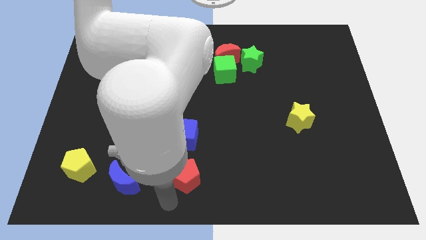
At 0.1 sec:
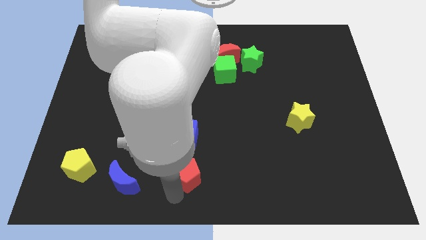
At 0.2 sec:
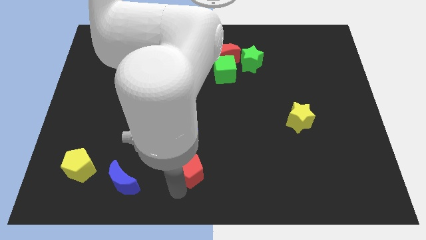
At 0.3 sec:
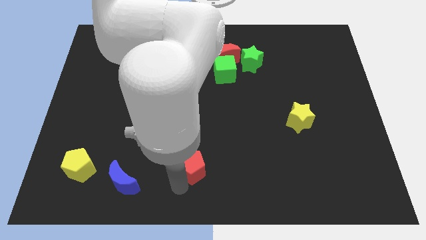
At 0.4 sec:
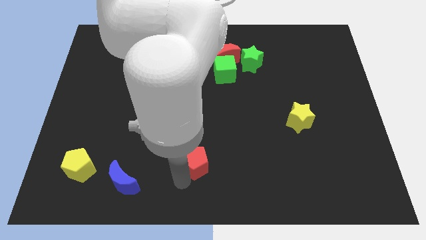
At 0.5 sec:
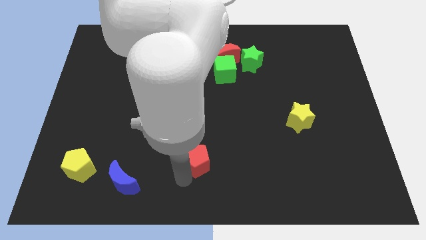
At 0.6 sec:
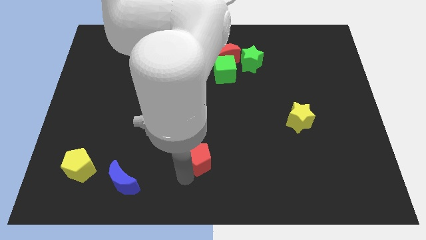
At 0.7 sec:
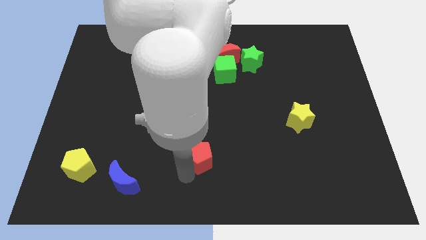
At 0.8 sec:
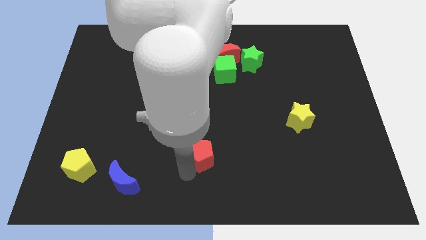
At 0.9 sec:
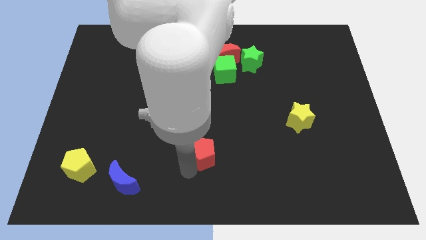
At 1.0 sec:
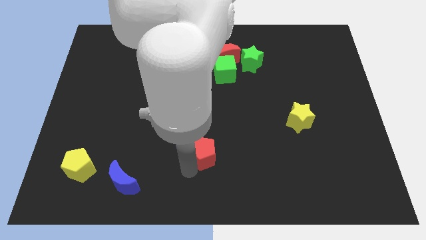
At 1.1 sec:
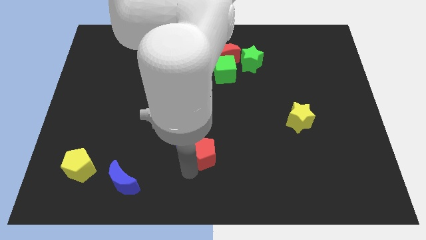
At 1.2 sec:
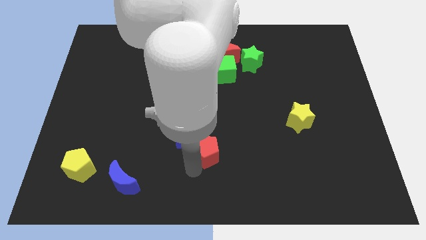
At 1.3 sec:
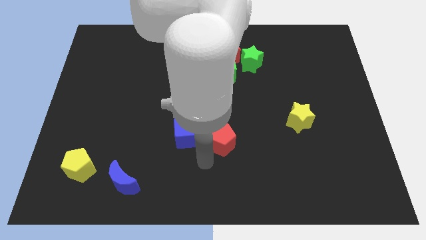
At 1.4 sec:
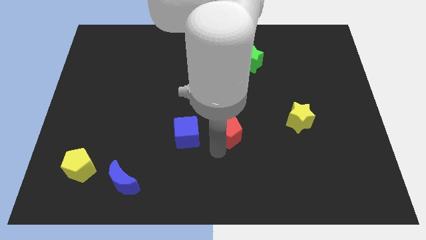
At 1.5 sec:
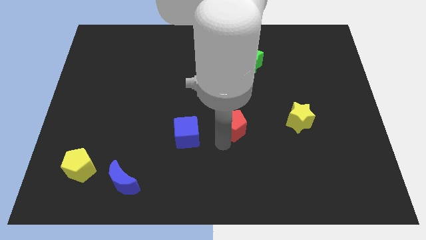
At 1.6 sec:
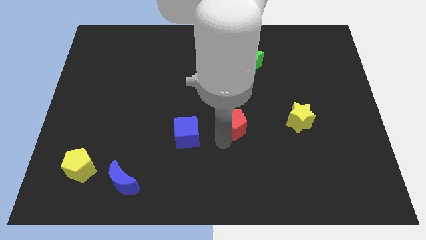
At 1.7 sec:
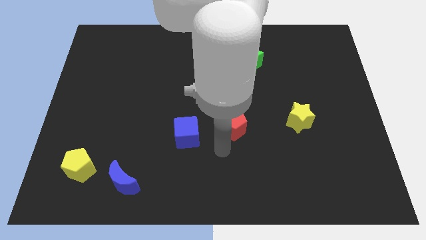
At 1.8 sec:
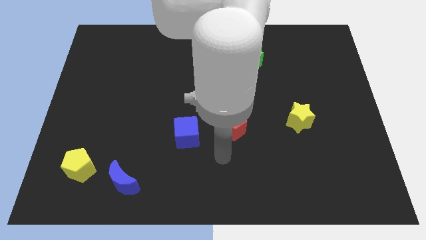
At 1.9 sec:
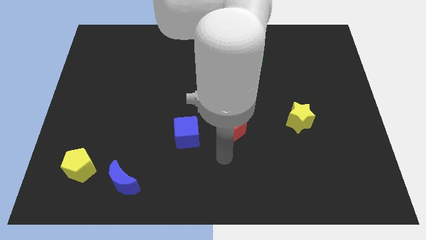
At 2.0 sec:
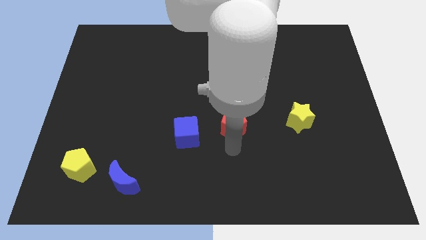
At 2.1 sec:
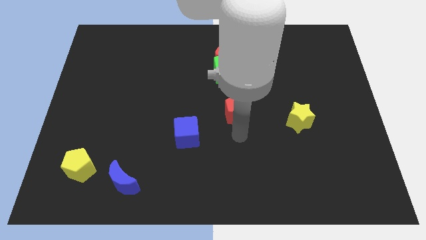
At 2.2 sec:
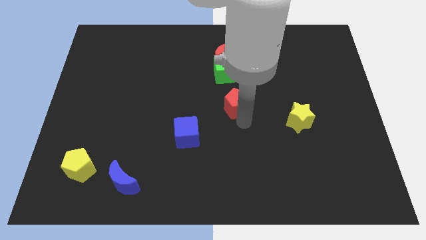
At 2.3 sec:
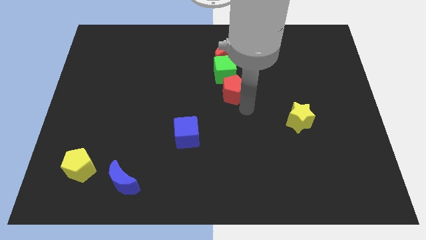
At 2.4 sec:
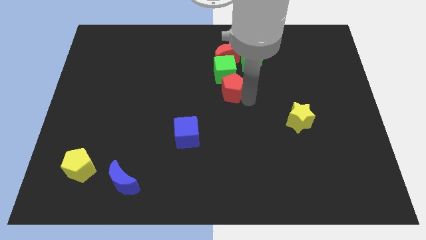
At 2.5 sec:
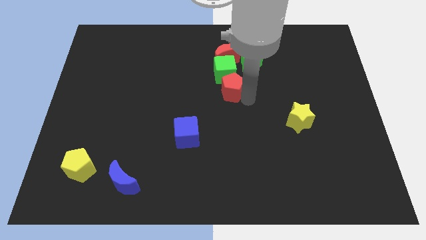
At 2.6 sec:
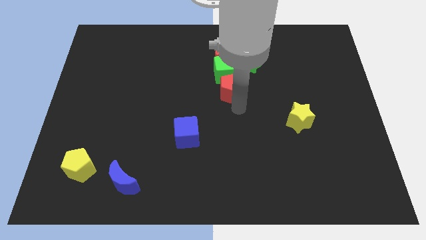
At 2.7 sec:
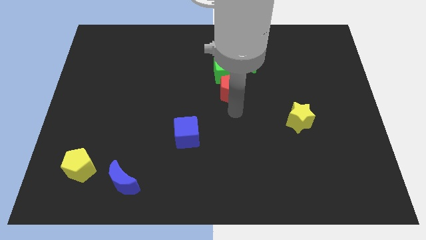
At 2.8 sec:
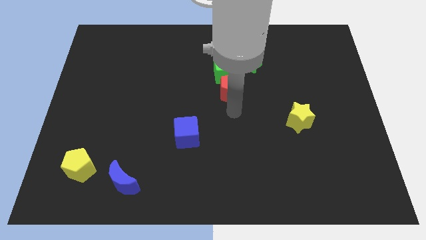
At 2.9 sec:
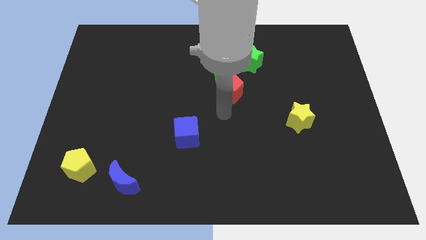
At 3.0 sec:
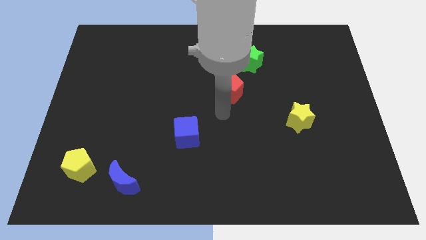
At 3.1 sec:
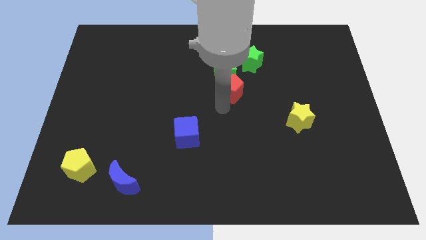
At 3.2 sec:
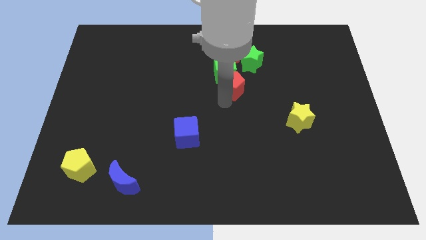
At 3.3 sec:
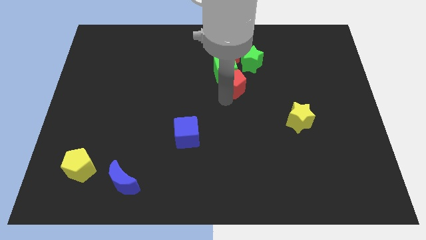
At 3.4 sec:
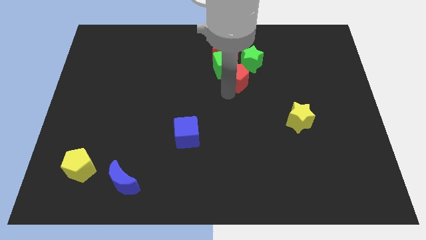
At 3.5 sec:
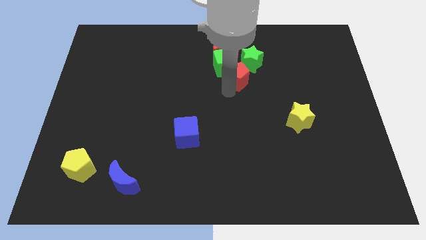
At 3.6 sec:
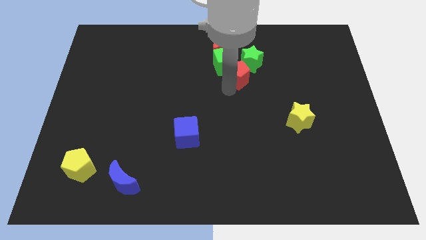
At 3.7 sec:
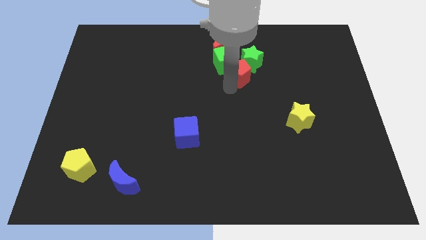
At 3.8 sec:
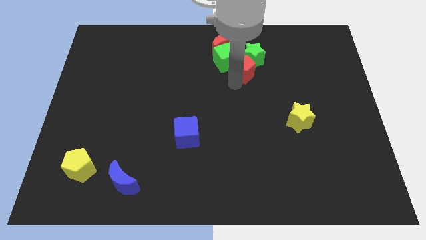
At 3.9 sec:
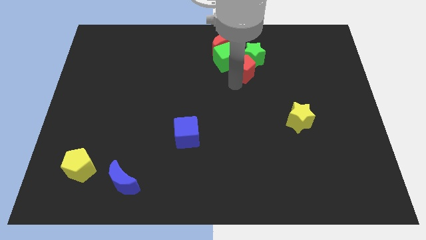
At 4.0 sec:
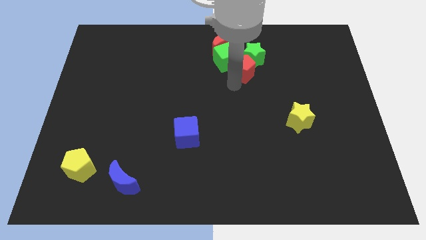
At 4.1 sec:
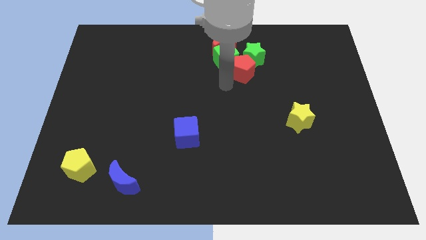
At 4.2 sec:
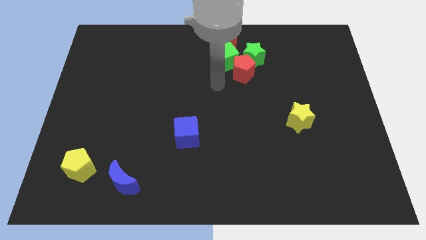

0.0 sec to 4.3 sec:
push the red pentagon into the green blocks

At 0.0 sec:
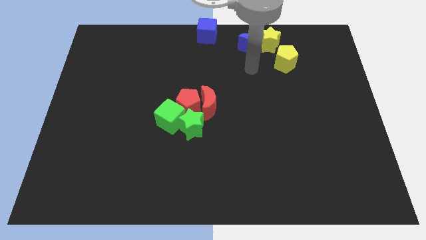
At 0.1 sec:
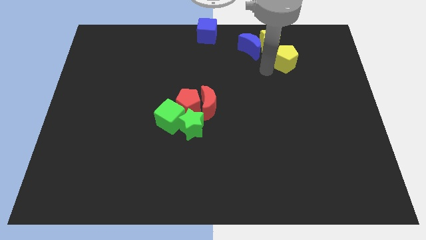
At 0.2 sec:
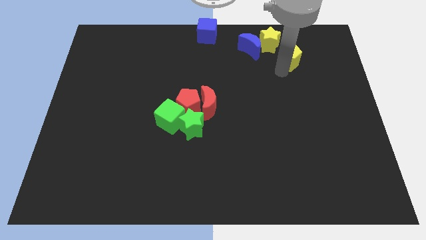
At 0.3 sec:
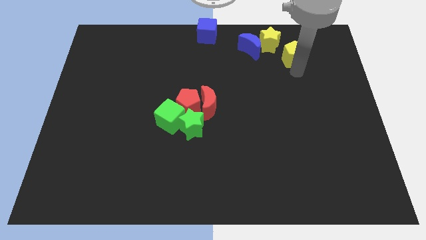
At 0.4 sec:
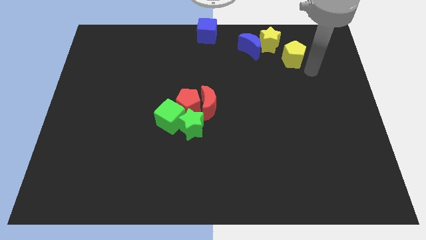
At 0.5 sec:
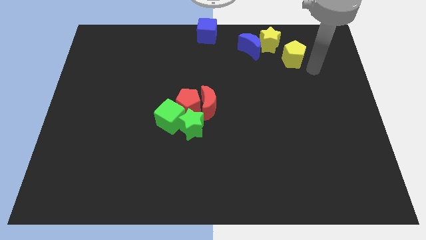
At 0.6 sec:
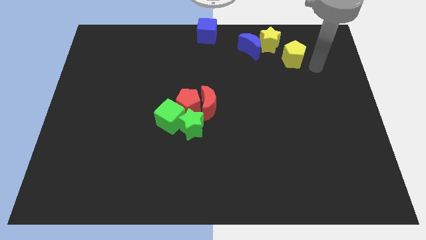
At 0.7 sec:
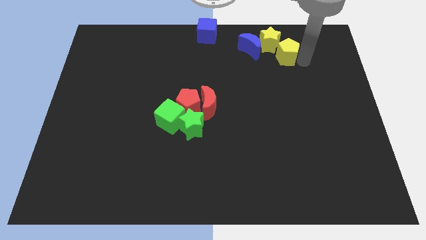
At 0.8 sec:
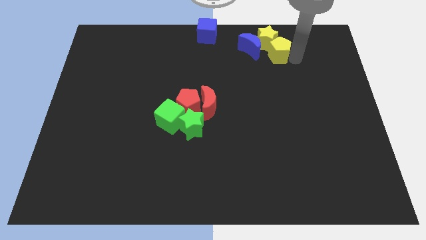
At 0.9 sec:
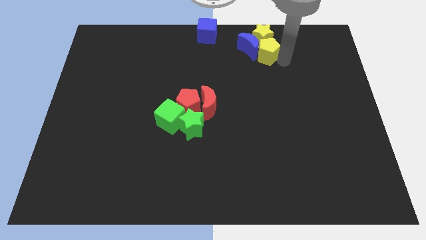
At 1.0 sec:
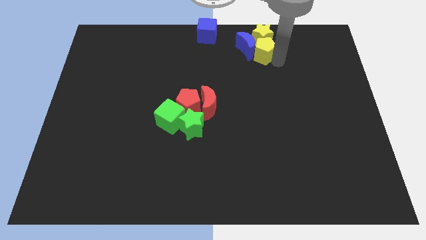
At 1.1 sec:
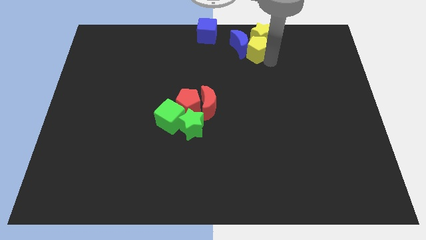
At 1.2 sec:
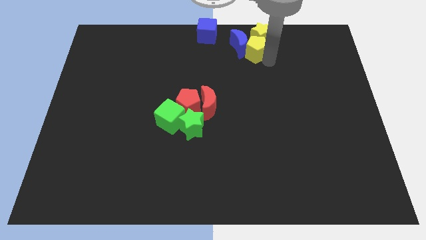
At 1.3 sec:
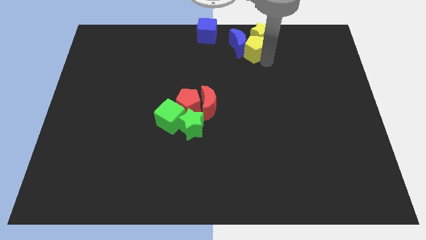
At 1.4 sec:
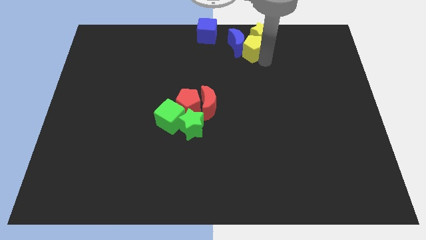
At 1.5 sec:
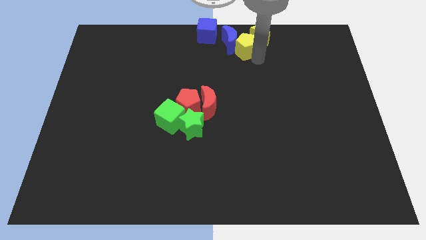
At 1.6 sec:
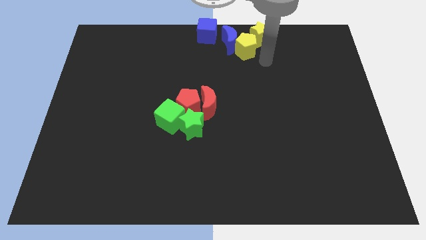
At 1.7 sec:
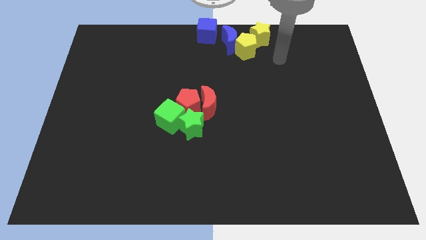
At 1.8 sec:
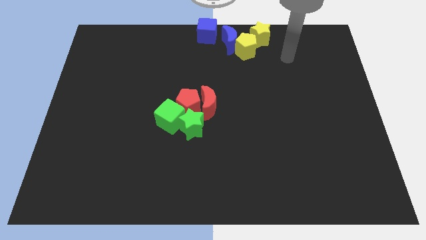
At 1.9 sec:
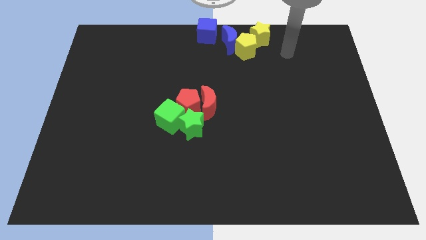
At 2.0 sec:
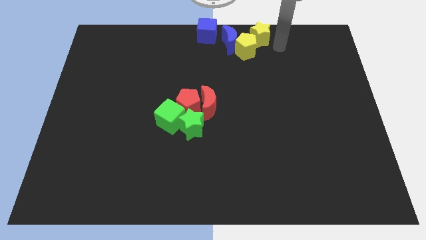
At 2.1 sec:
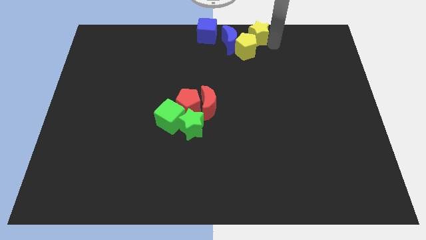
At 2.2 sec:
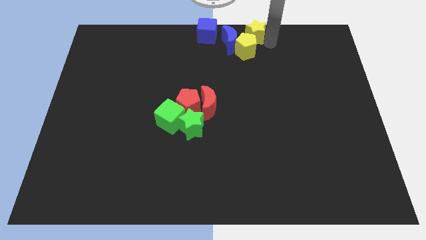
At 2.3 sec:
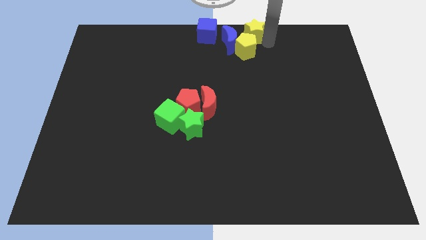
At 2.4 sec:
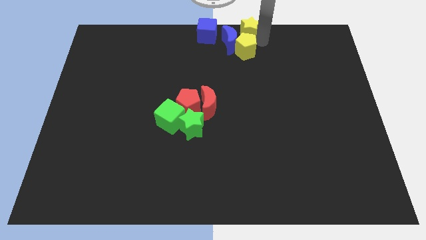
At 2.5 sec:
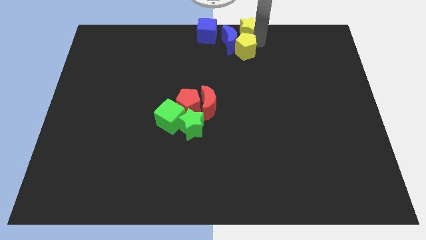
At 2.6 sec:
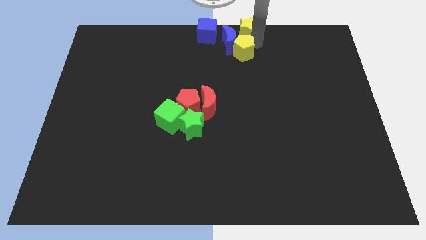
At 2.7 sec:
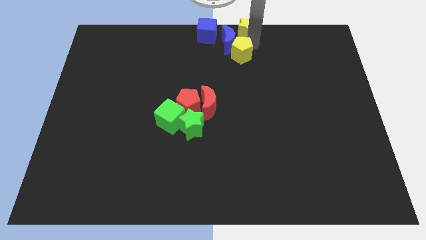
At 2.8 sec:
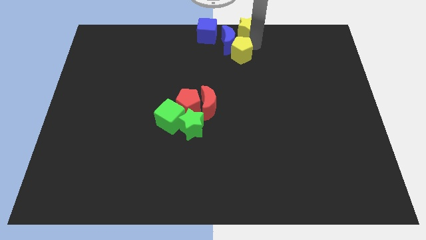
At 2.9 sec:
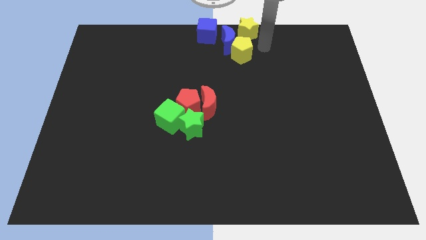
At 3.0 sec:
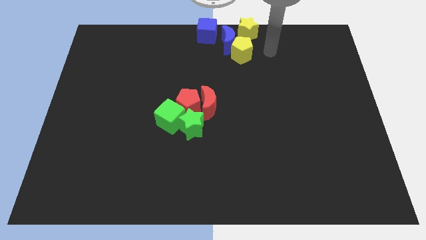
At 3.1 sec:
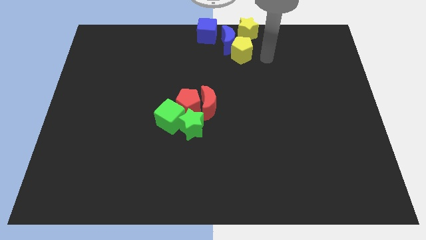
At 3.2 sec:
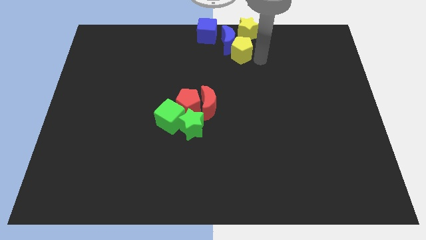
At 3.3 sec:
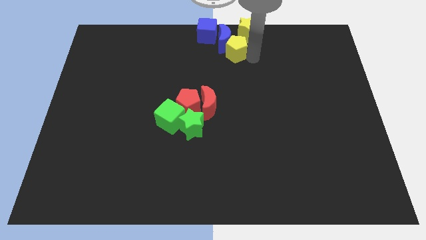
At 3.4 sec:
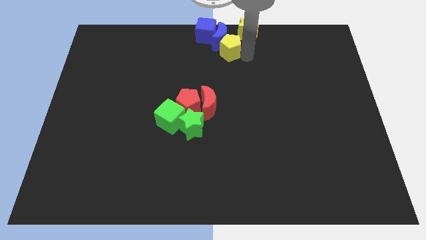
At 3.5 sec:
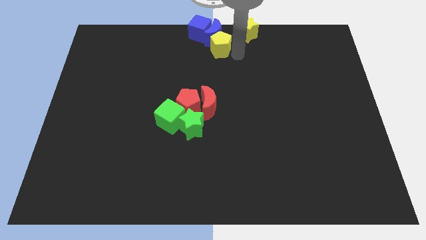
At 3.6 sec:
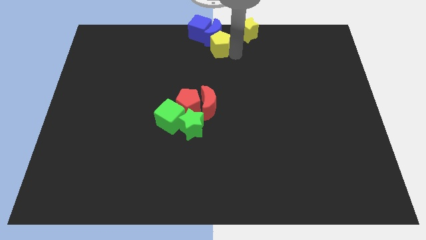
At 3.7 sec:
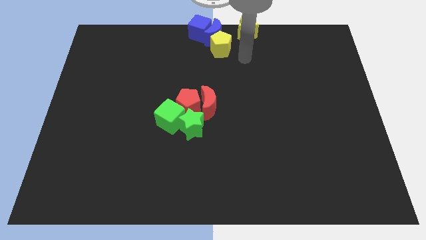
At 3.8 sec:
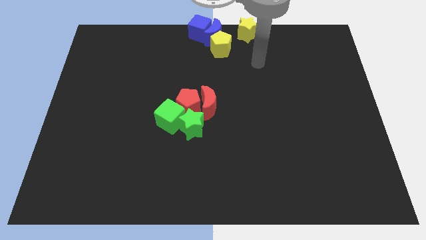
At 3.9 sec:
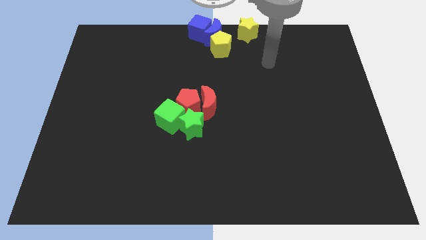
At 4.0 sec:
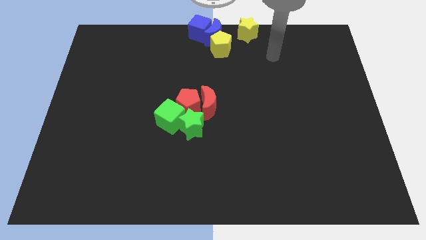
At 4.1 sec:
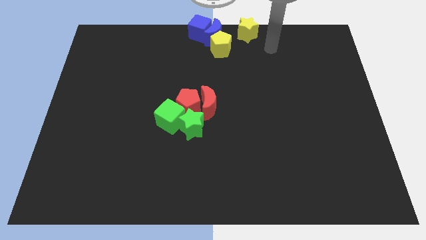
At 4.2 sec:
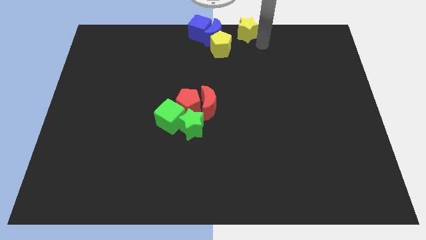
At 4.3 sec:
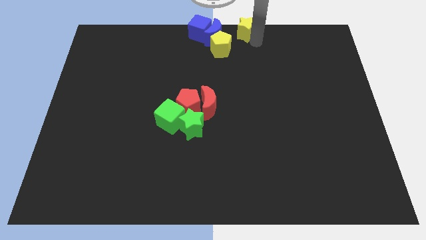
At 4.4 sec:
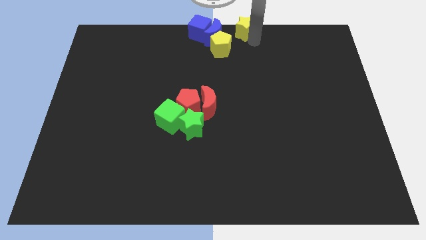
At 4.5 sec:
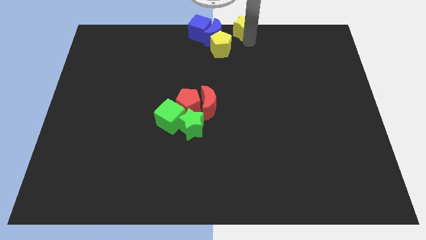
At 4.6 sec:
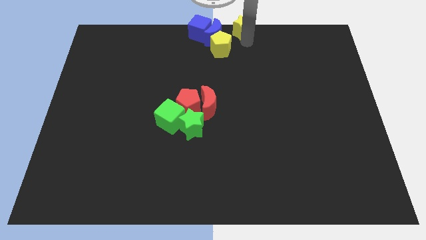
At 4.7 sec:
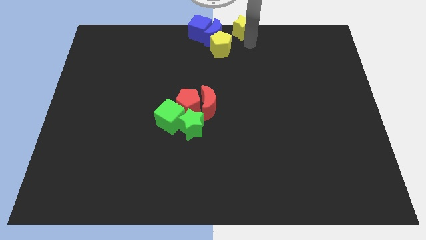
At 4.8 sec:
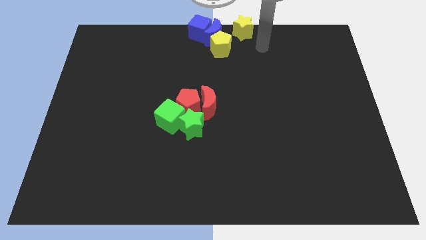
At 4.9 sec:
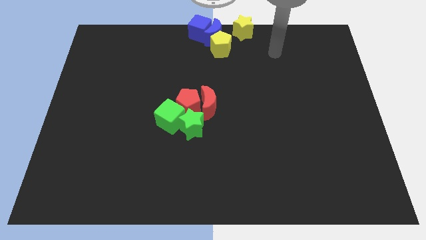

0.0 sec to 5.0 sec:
push the group of blocks to the left side slightly at the top center of board
